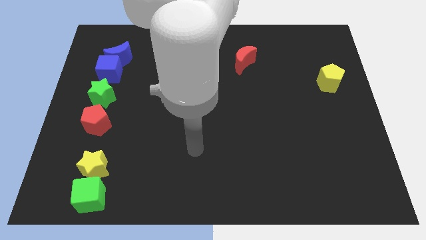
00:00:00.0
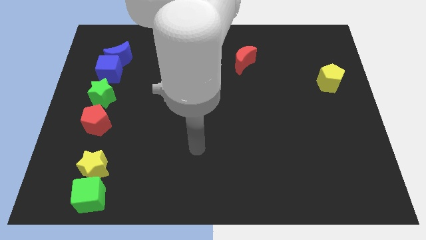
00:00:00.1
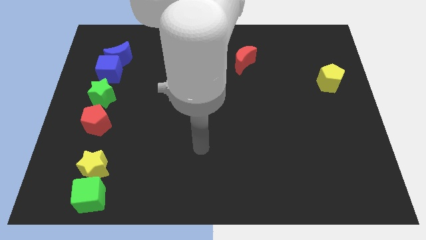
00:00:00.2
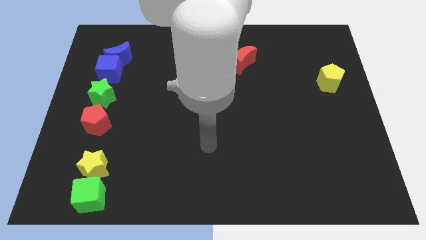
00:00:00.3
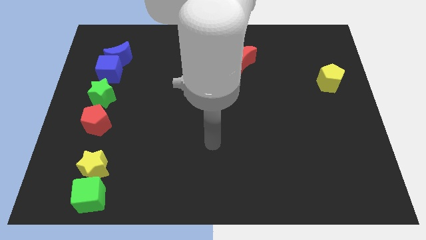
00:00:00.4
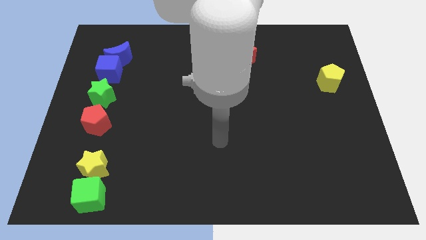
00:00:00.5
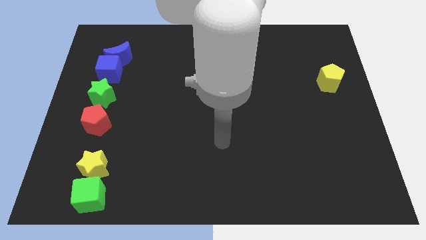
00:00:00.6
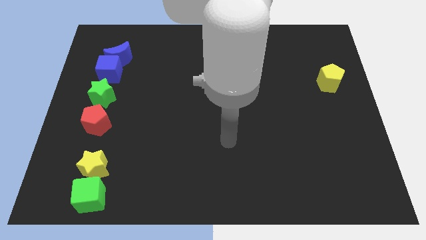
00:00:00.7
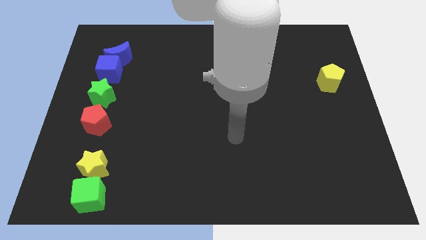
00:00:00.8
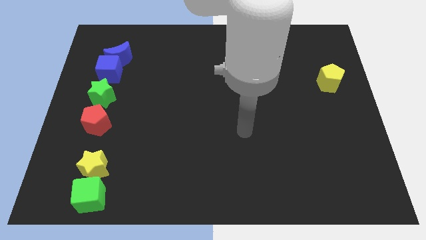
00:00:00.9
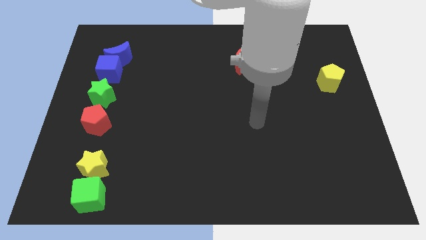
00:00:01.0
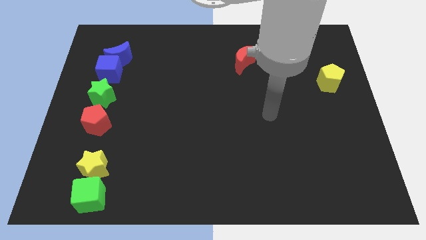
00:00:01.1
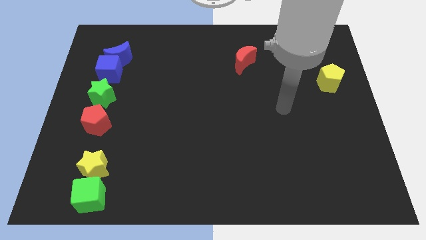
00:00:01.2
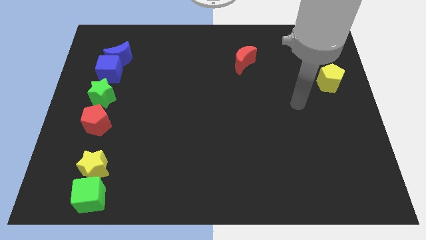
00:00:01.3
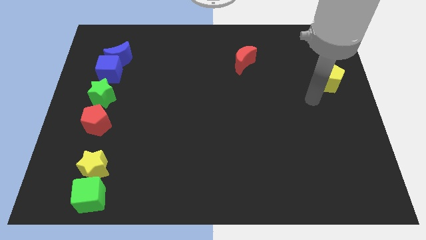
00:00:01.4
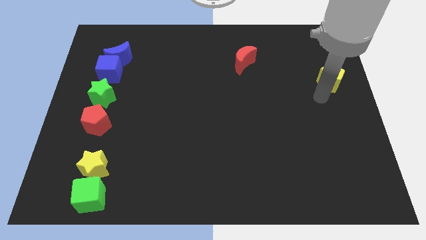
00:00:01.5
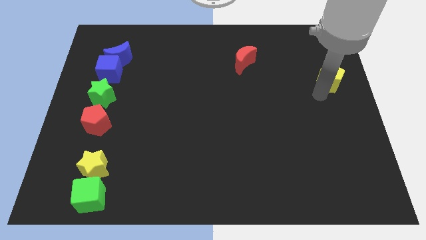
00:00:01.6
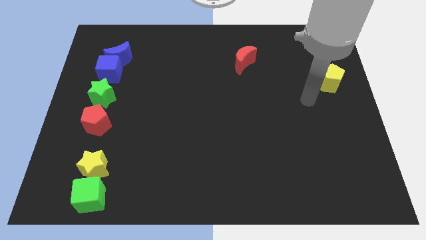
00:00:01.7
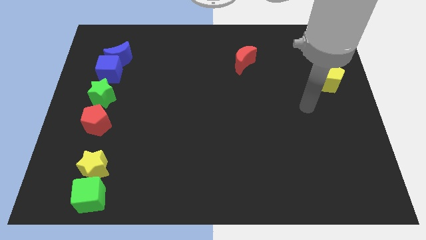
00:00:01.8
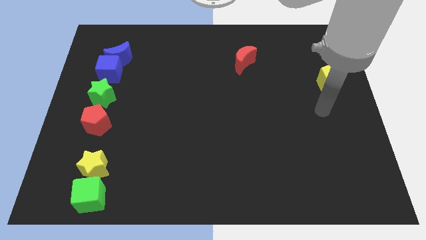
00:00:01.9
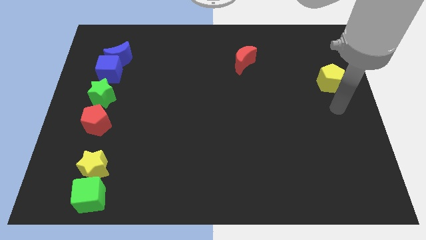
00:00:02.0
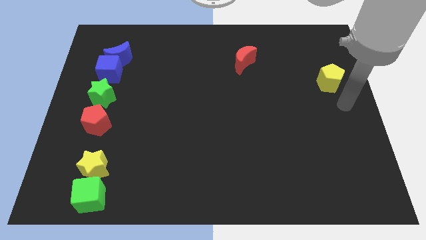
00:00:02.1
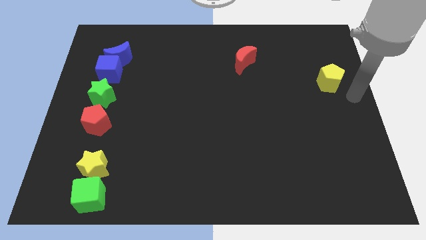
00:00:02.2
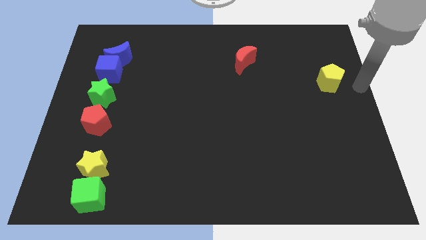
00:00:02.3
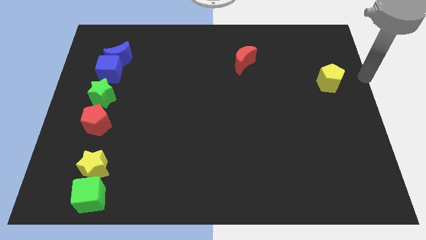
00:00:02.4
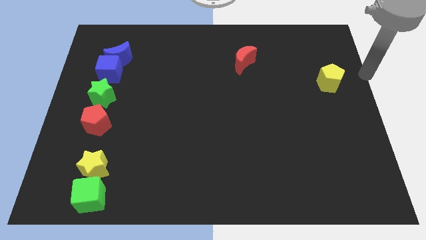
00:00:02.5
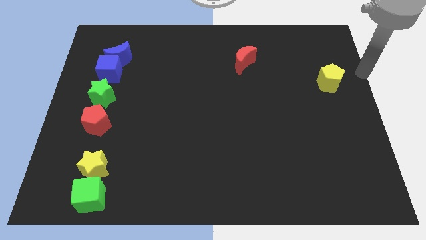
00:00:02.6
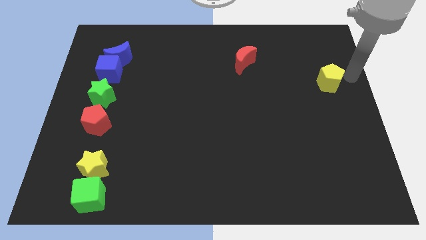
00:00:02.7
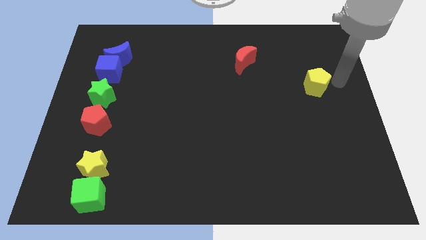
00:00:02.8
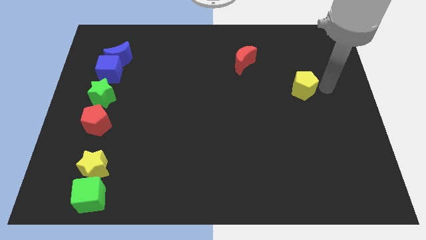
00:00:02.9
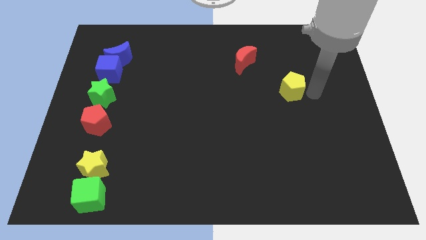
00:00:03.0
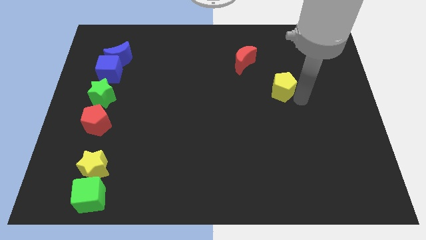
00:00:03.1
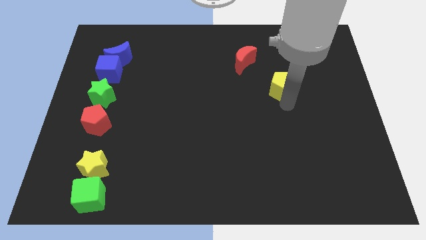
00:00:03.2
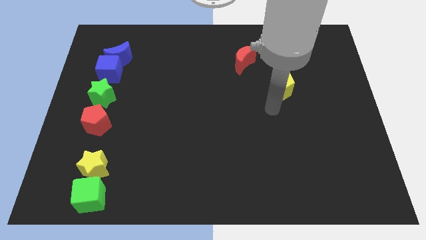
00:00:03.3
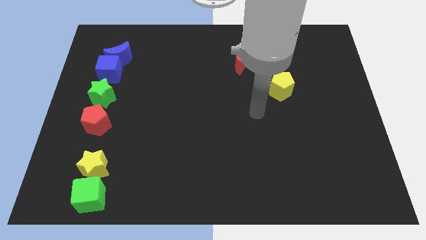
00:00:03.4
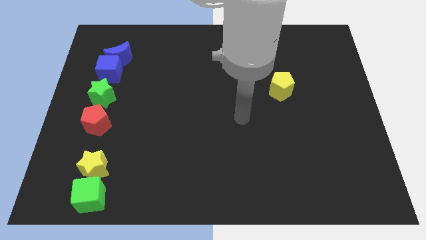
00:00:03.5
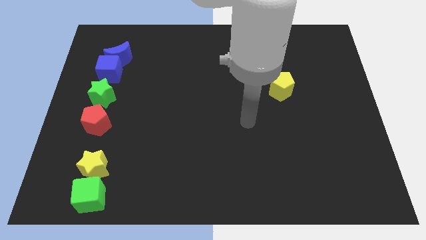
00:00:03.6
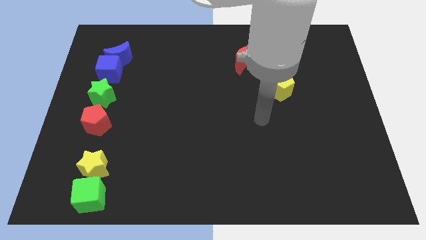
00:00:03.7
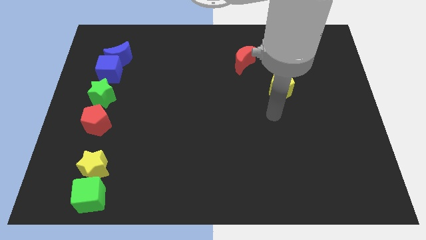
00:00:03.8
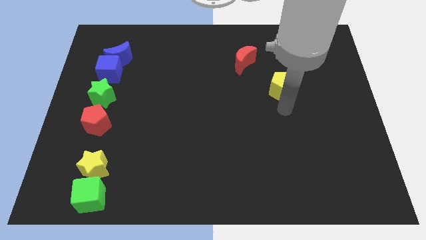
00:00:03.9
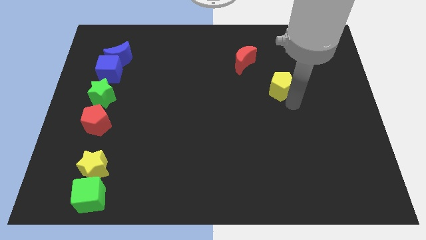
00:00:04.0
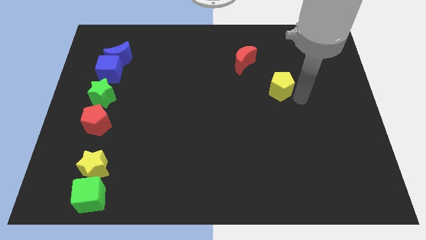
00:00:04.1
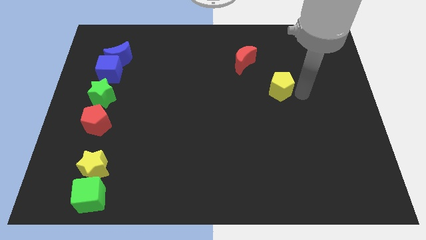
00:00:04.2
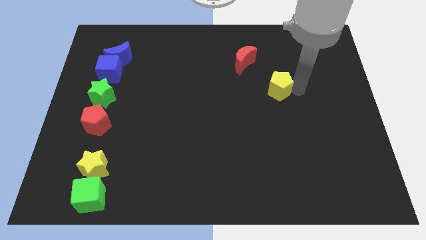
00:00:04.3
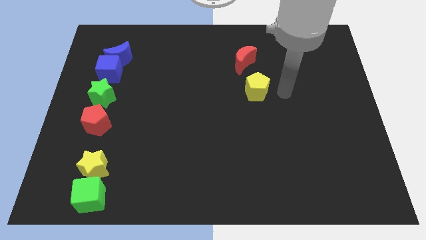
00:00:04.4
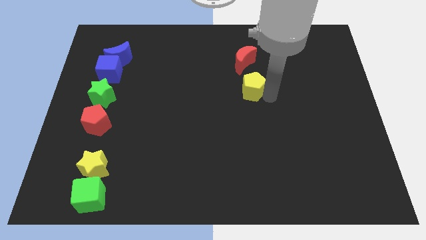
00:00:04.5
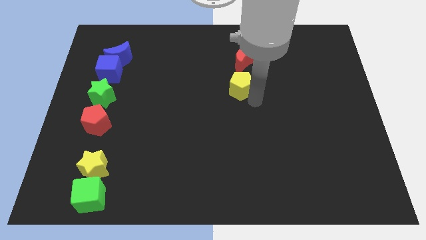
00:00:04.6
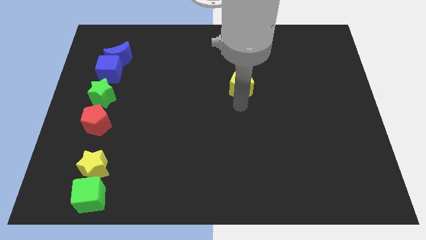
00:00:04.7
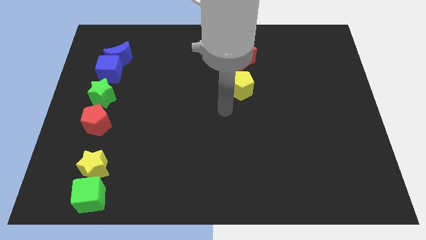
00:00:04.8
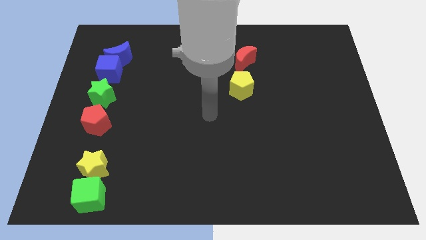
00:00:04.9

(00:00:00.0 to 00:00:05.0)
move the yellow pentagon vertically to the bottom of the red crescent

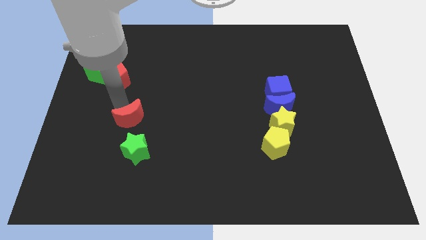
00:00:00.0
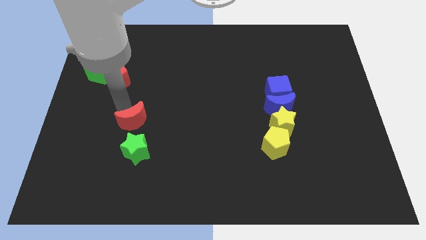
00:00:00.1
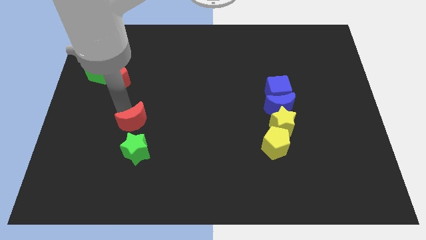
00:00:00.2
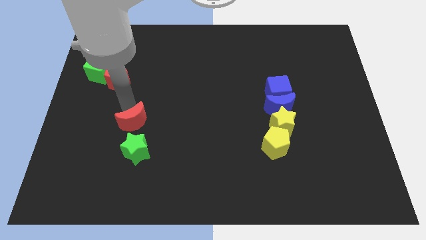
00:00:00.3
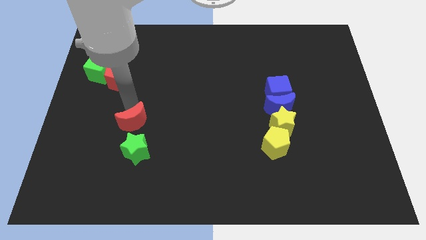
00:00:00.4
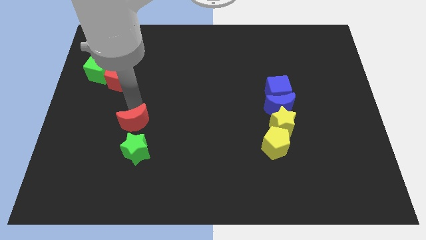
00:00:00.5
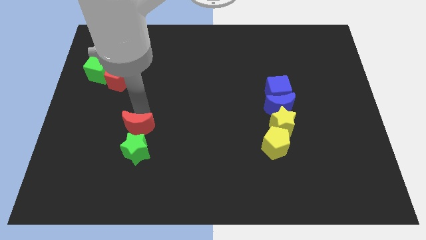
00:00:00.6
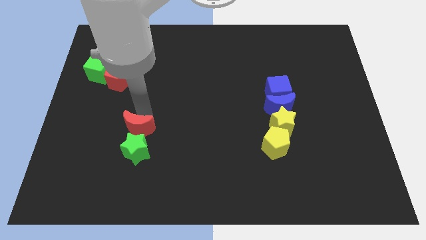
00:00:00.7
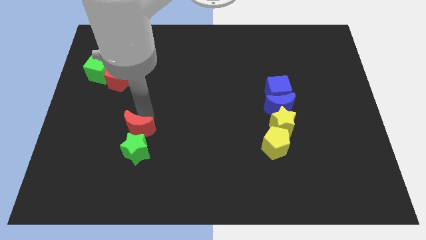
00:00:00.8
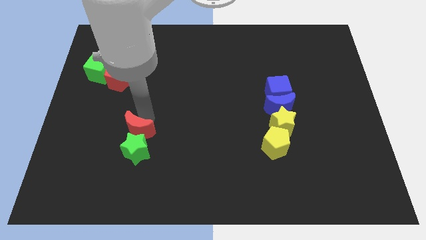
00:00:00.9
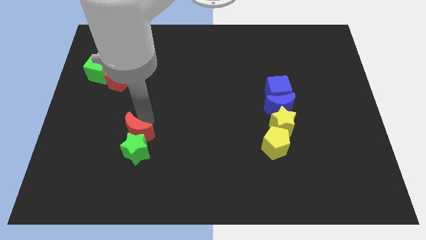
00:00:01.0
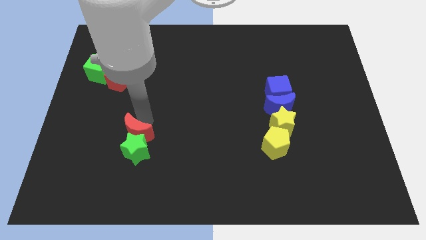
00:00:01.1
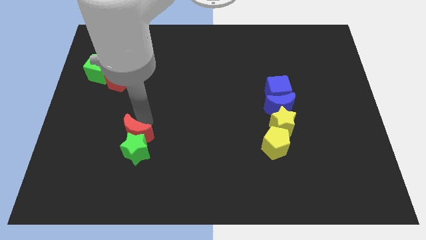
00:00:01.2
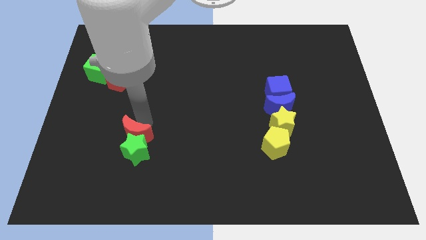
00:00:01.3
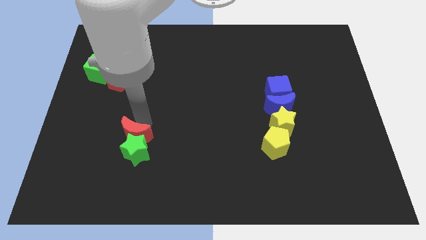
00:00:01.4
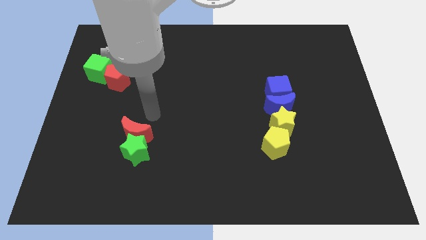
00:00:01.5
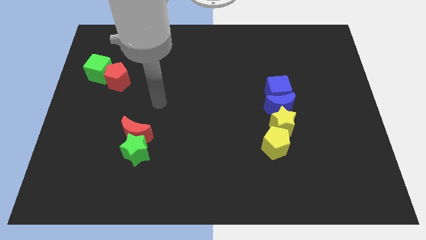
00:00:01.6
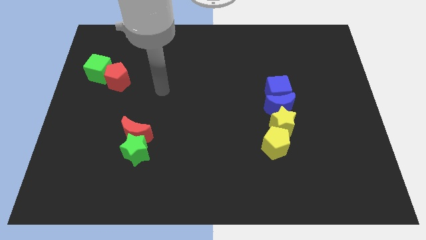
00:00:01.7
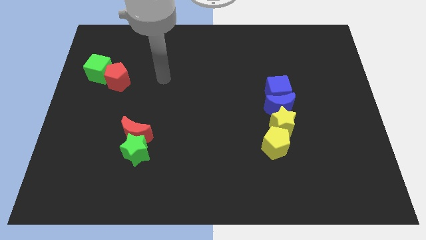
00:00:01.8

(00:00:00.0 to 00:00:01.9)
push the red moon into the green star

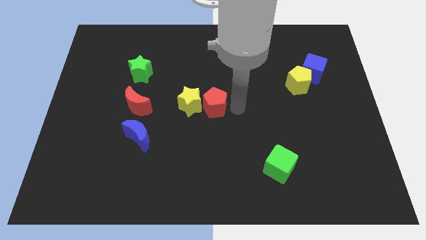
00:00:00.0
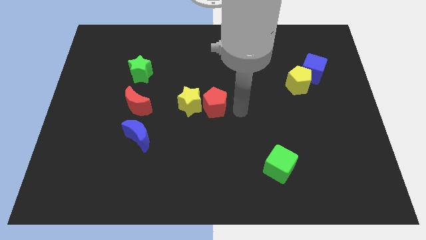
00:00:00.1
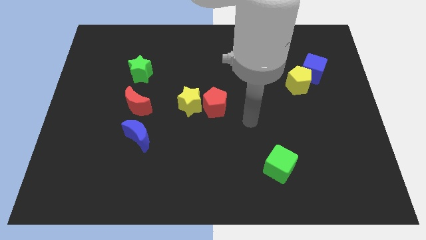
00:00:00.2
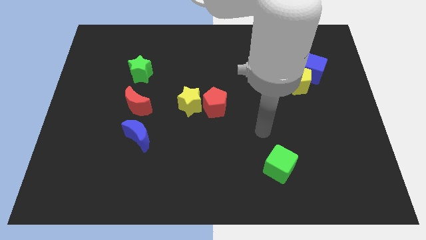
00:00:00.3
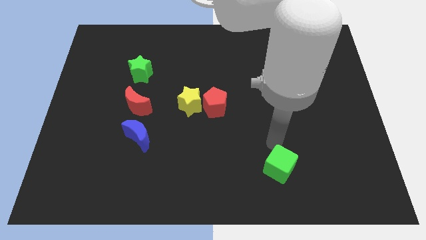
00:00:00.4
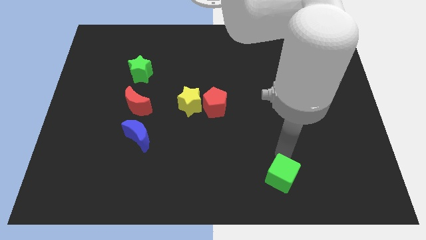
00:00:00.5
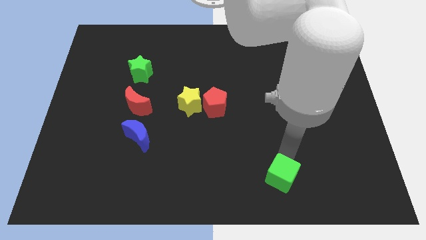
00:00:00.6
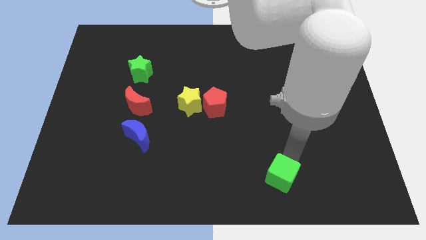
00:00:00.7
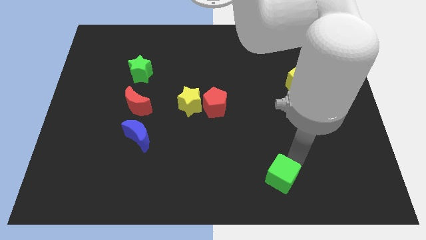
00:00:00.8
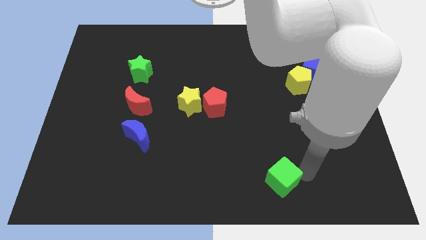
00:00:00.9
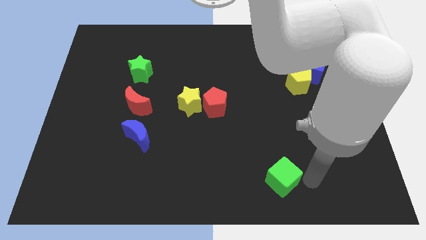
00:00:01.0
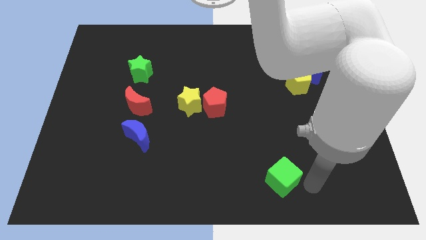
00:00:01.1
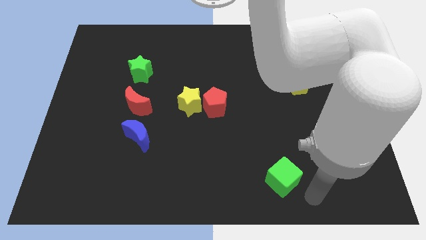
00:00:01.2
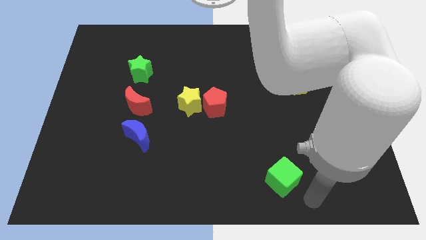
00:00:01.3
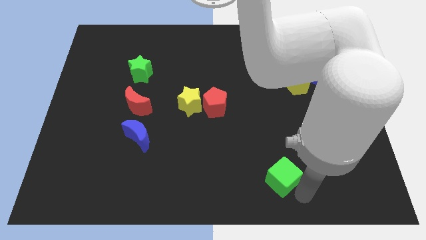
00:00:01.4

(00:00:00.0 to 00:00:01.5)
slightly push the green cube downwards

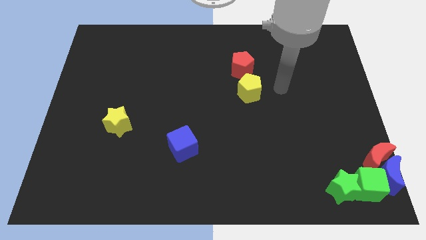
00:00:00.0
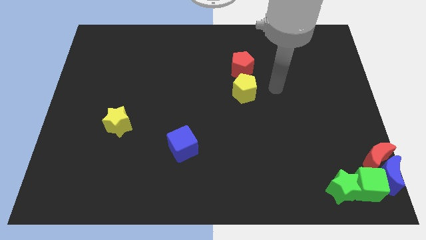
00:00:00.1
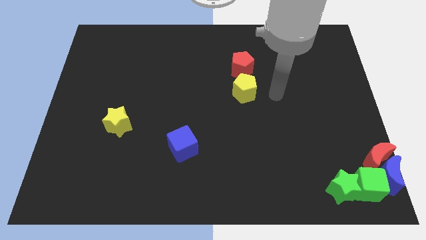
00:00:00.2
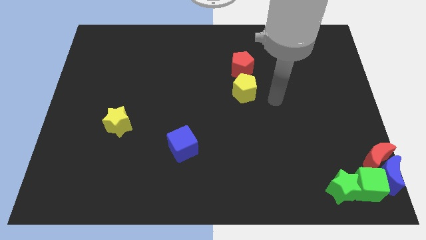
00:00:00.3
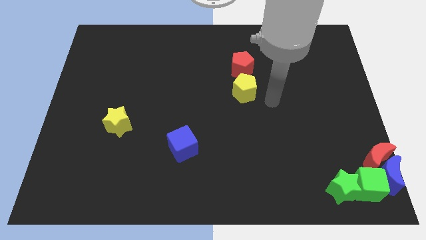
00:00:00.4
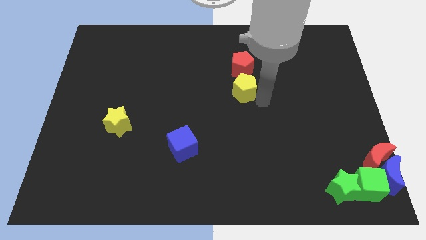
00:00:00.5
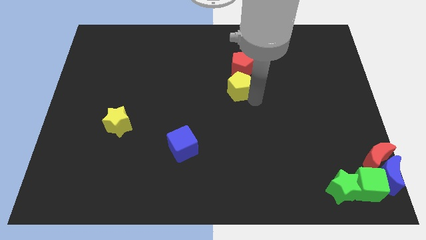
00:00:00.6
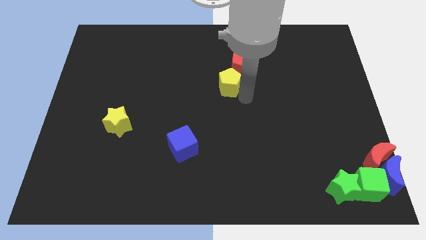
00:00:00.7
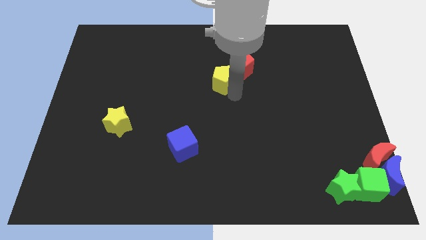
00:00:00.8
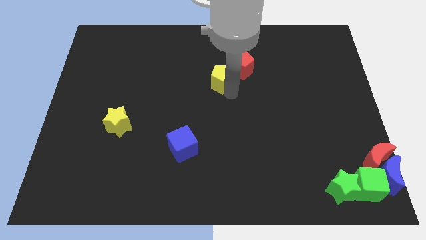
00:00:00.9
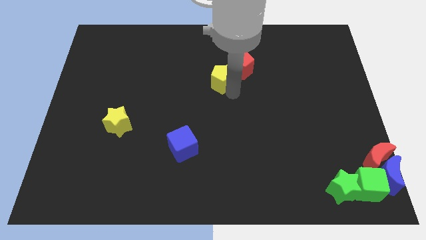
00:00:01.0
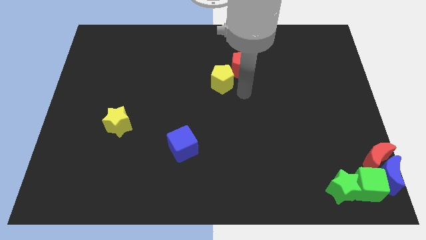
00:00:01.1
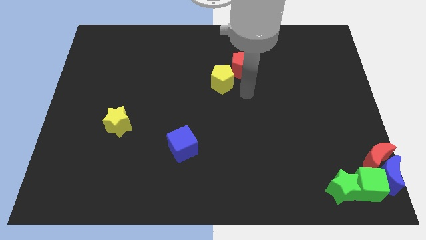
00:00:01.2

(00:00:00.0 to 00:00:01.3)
put the yellow pentagon diagonal to the top right to the yellow star
